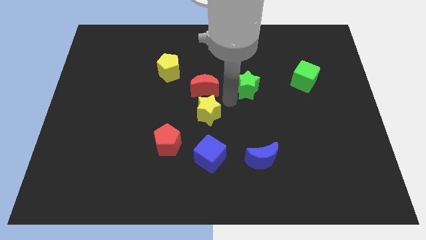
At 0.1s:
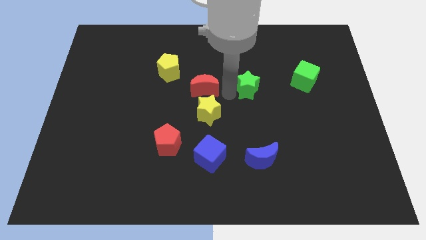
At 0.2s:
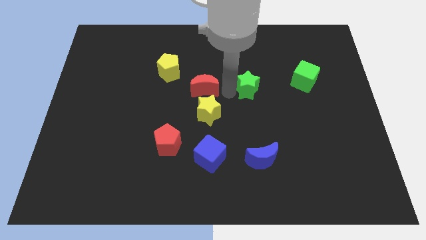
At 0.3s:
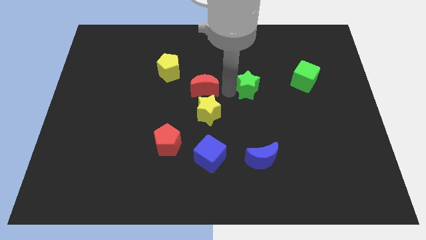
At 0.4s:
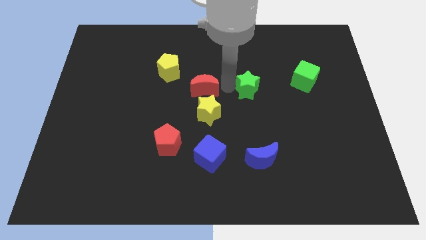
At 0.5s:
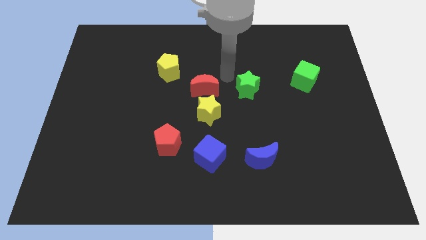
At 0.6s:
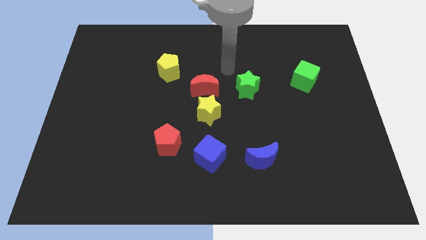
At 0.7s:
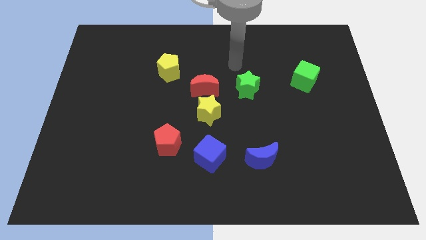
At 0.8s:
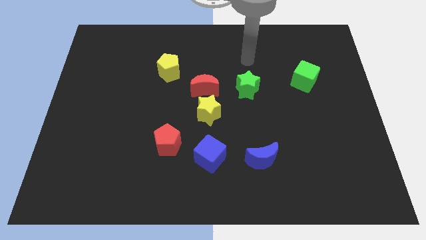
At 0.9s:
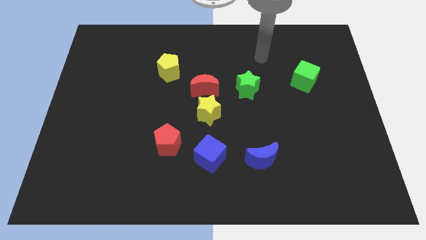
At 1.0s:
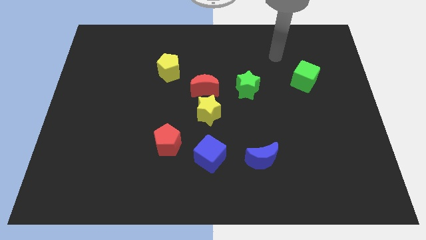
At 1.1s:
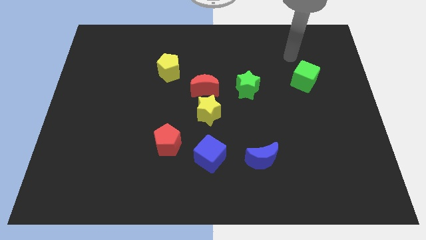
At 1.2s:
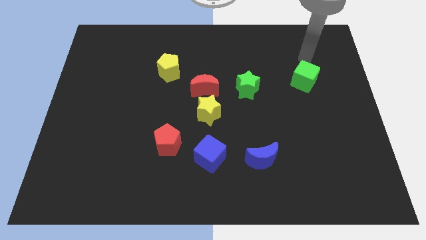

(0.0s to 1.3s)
move your arm above the green cube

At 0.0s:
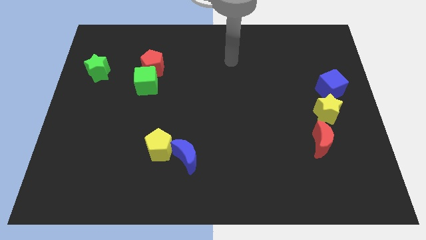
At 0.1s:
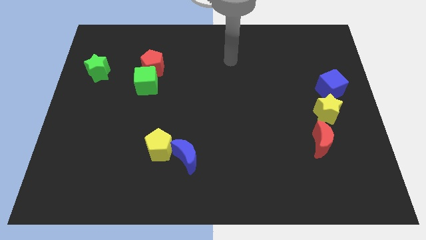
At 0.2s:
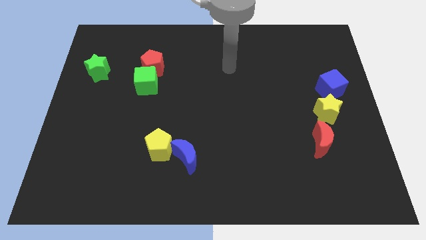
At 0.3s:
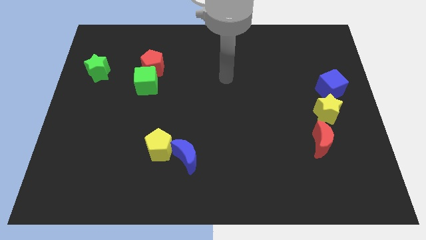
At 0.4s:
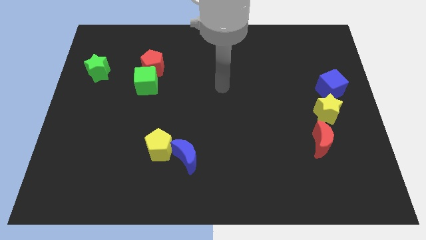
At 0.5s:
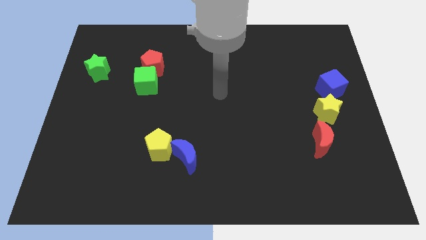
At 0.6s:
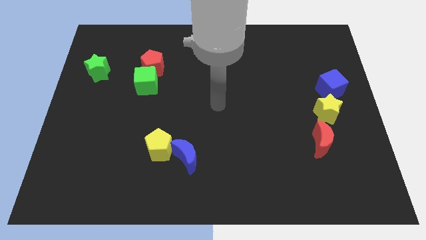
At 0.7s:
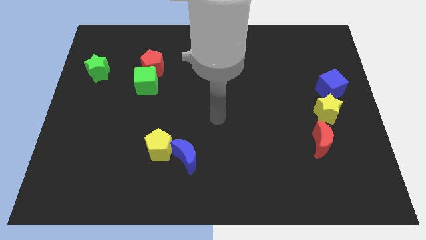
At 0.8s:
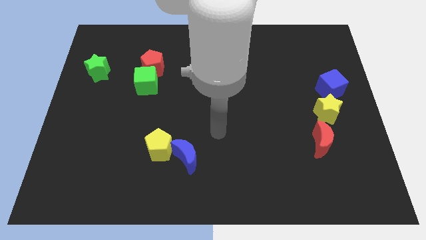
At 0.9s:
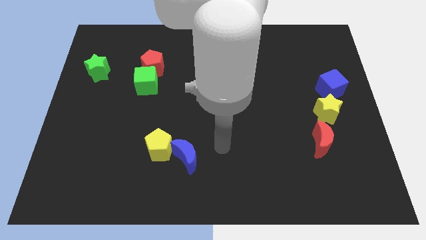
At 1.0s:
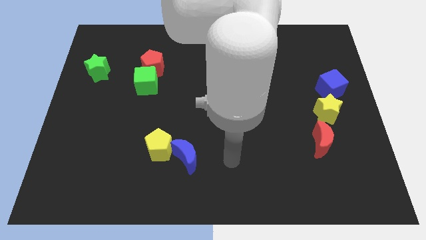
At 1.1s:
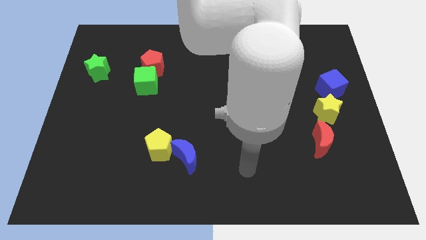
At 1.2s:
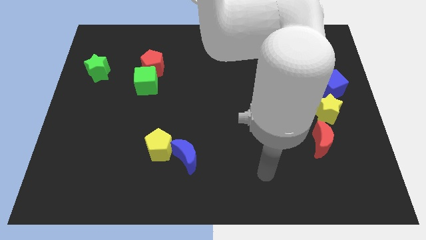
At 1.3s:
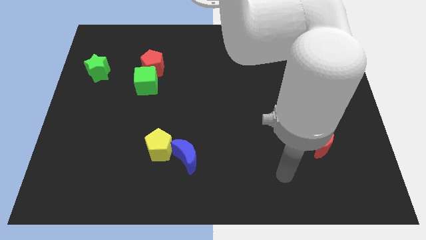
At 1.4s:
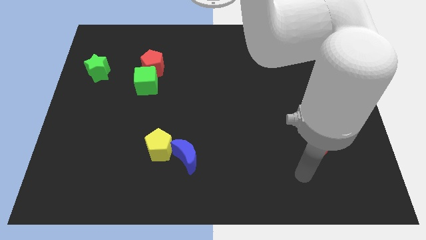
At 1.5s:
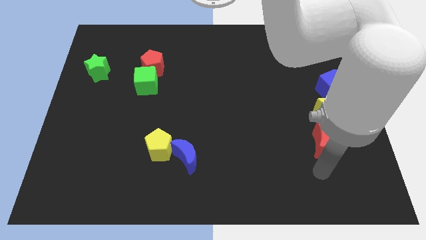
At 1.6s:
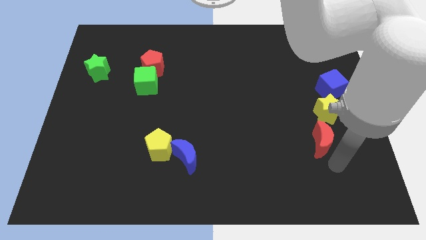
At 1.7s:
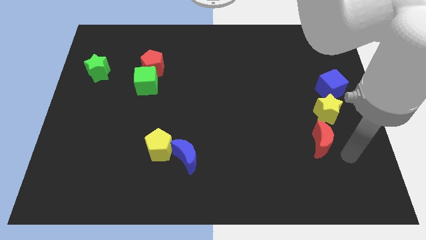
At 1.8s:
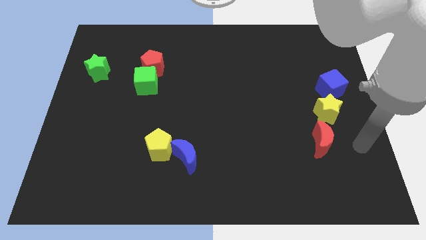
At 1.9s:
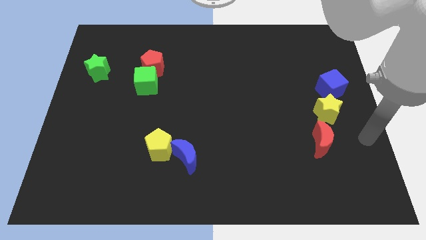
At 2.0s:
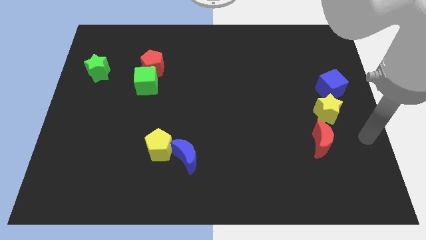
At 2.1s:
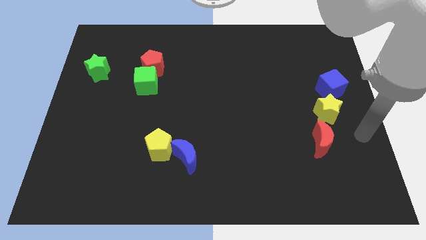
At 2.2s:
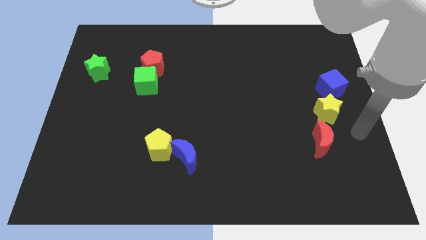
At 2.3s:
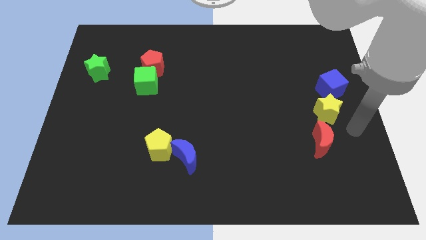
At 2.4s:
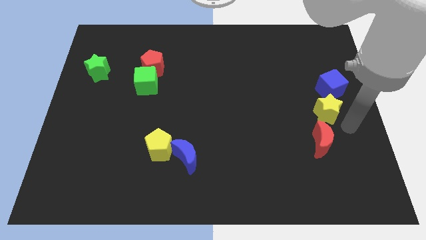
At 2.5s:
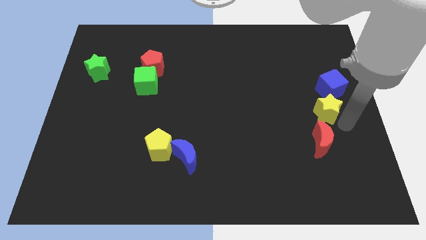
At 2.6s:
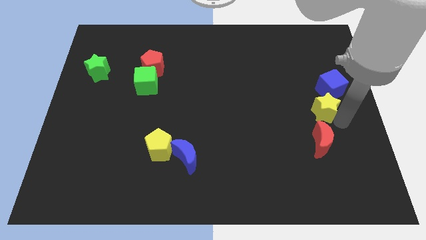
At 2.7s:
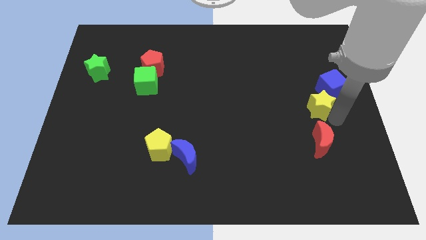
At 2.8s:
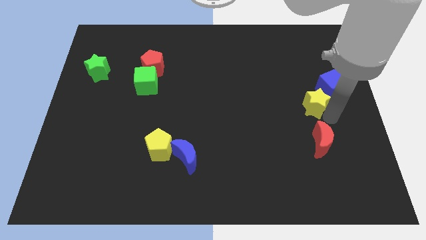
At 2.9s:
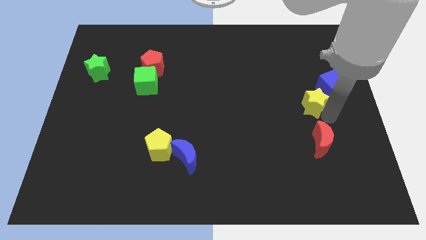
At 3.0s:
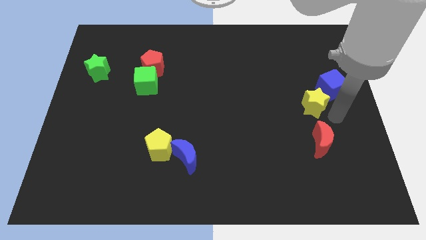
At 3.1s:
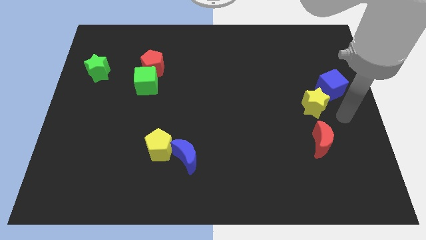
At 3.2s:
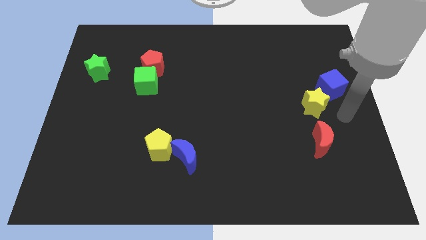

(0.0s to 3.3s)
separate the yellow star from the blue cube

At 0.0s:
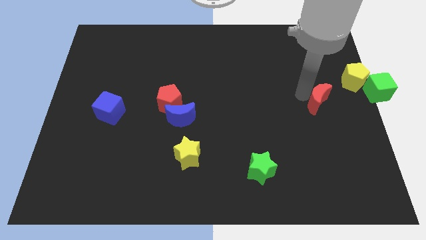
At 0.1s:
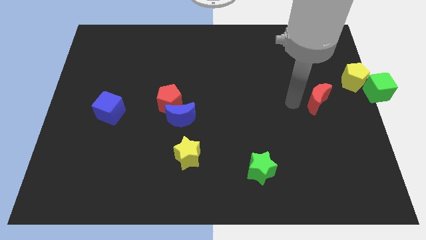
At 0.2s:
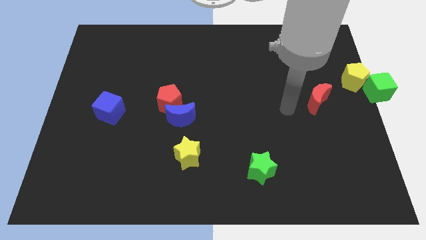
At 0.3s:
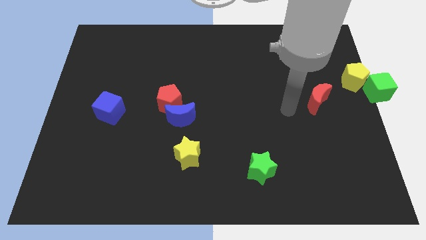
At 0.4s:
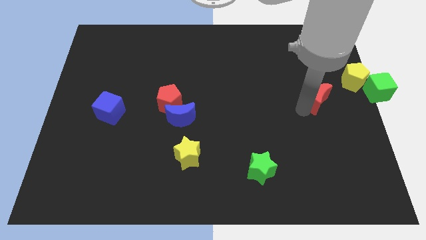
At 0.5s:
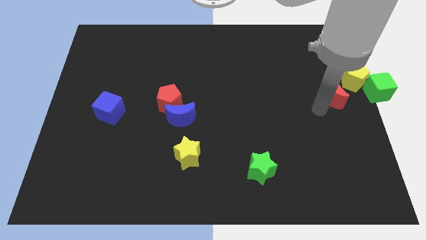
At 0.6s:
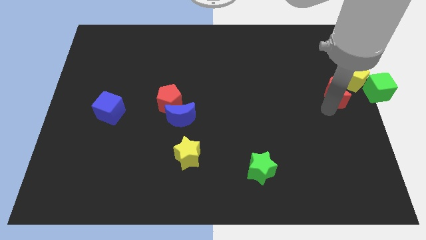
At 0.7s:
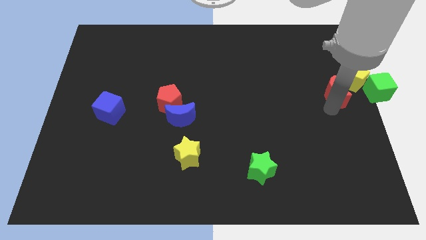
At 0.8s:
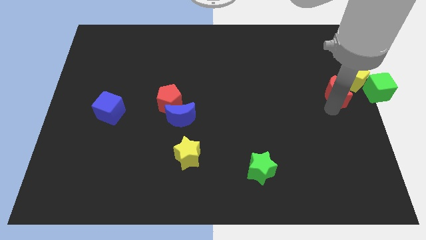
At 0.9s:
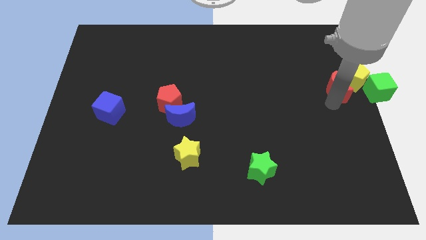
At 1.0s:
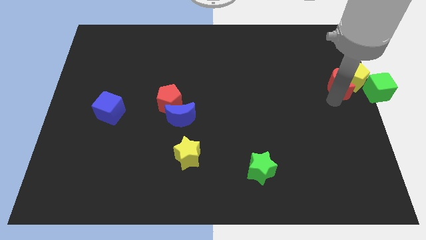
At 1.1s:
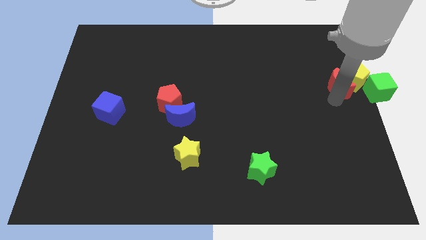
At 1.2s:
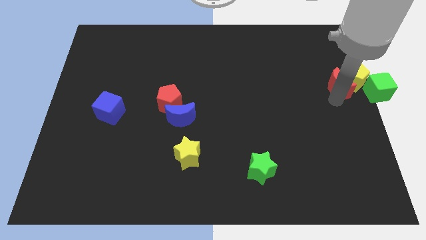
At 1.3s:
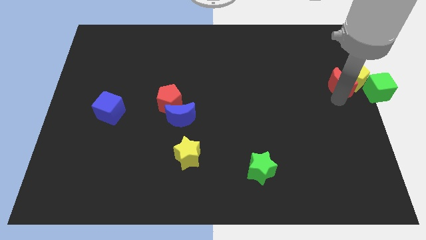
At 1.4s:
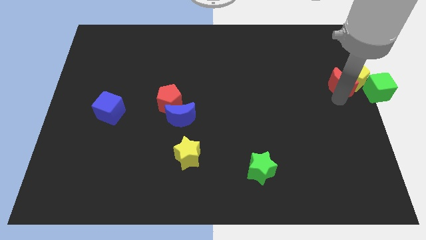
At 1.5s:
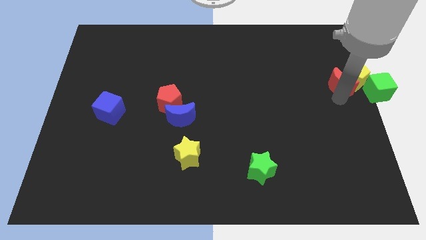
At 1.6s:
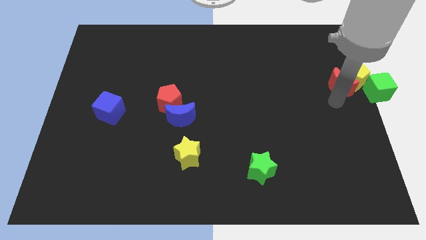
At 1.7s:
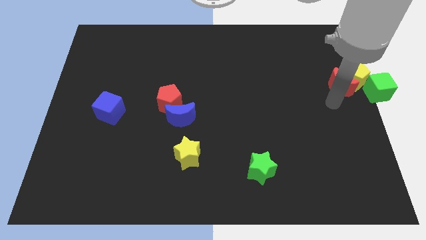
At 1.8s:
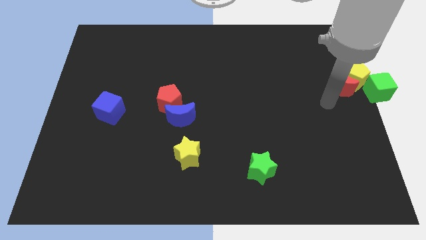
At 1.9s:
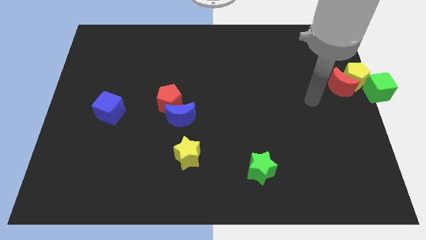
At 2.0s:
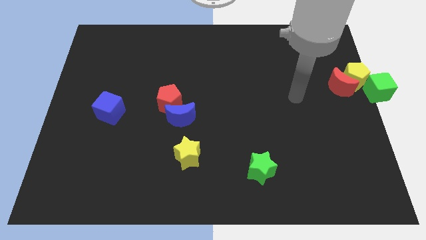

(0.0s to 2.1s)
push red moon into yellow pentagon

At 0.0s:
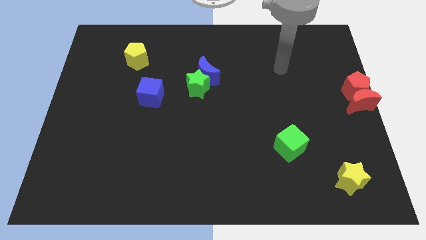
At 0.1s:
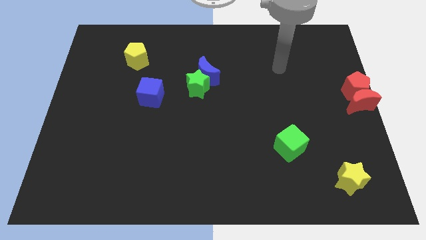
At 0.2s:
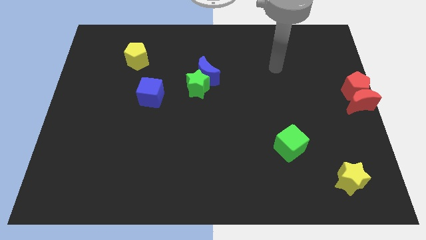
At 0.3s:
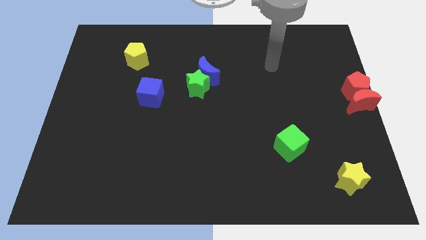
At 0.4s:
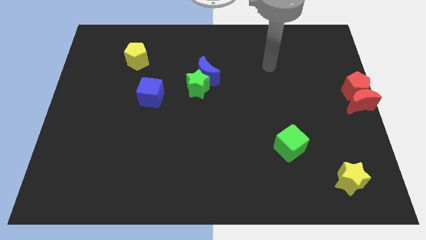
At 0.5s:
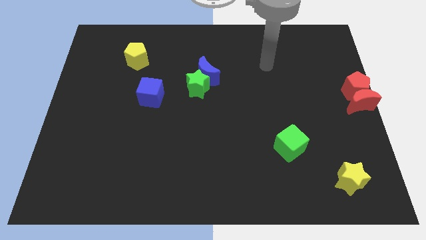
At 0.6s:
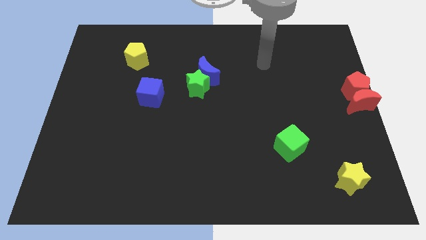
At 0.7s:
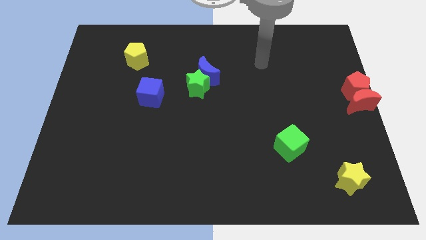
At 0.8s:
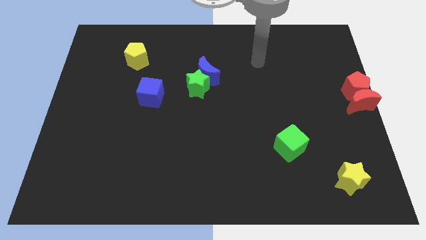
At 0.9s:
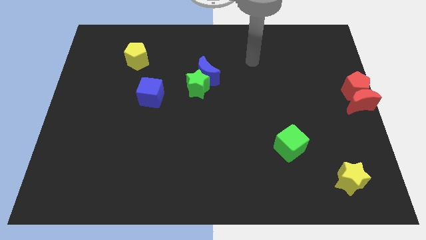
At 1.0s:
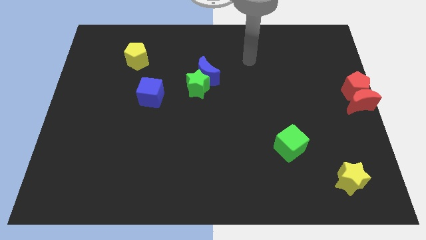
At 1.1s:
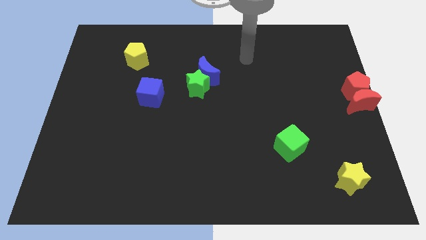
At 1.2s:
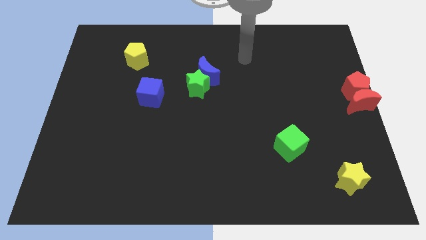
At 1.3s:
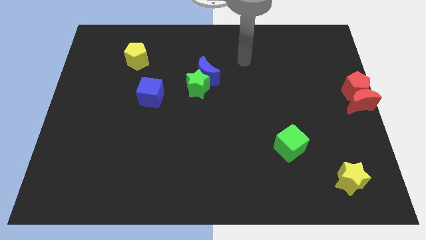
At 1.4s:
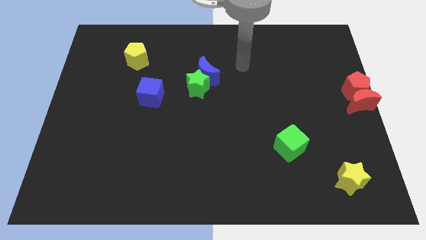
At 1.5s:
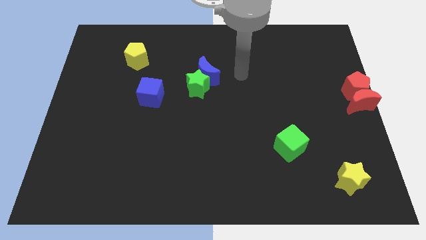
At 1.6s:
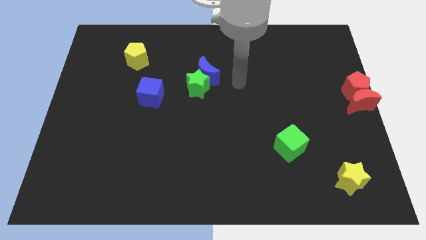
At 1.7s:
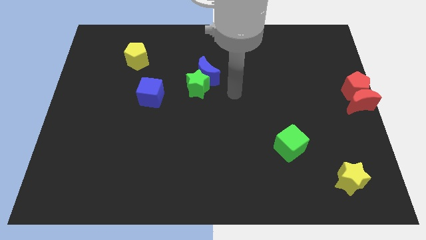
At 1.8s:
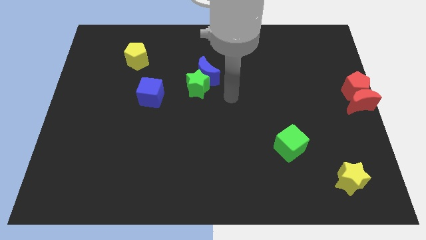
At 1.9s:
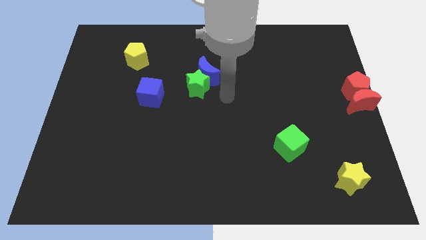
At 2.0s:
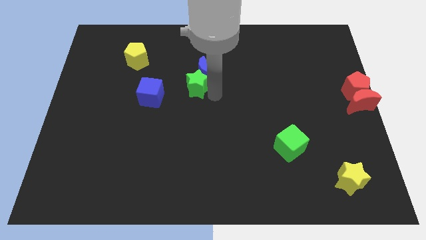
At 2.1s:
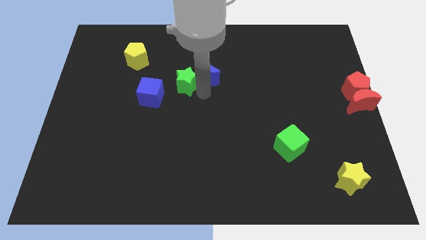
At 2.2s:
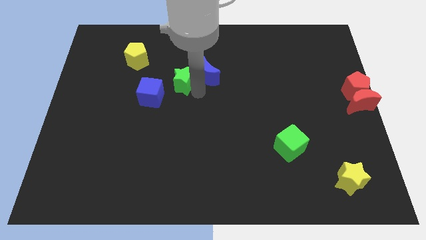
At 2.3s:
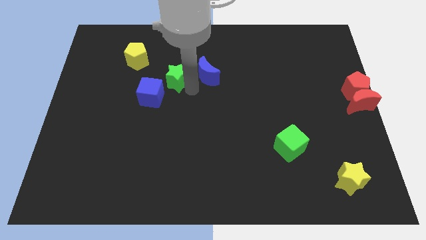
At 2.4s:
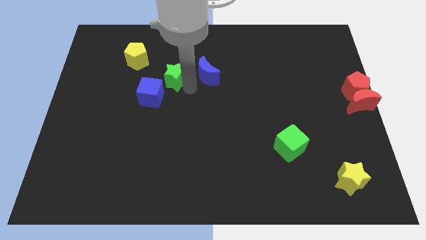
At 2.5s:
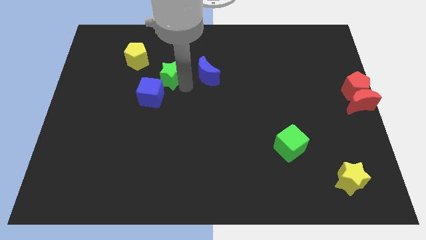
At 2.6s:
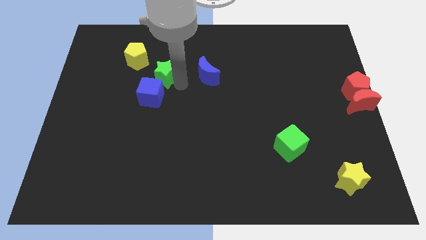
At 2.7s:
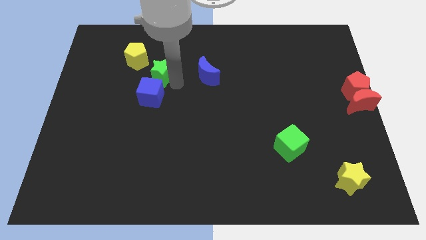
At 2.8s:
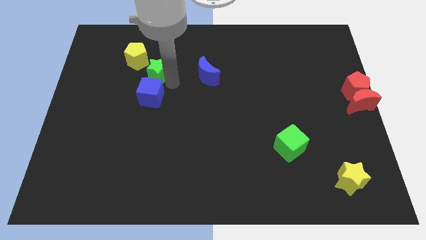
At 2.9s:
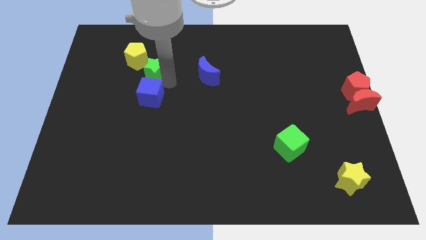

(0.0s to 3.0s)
push the green star towards the left side of the board
